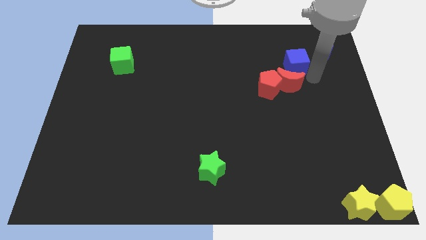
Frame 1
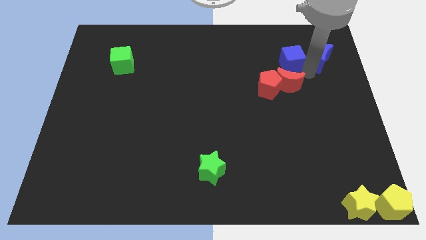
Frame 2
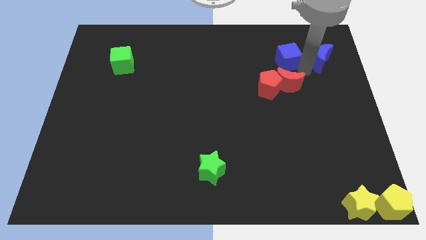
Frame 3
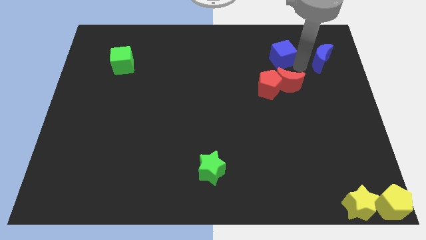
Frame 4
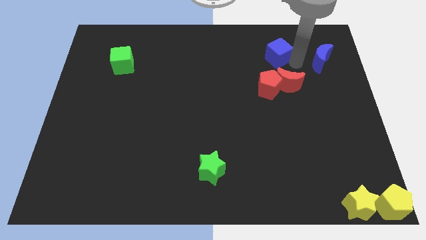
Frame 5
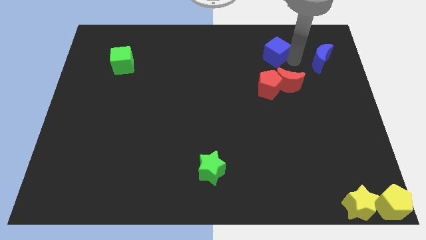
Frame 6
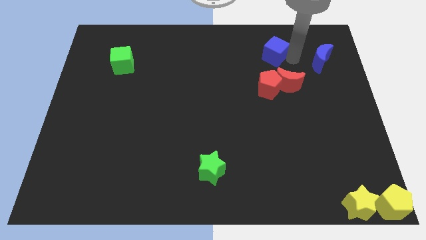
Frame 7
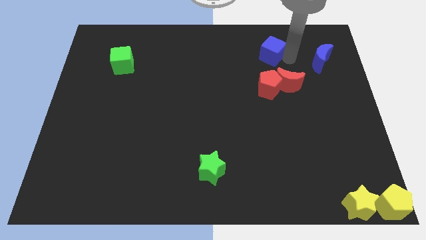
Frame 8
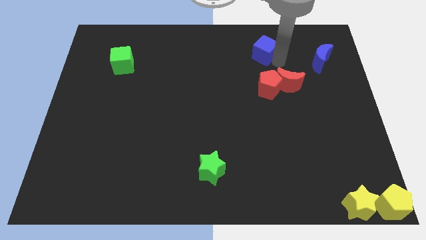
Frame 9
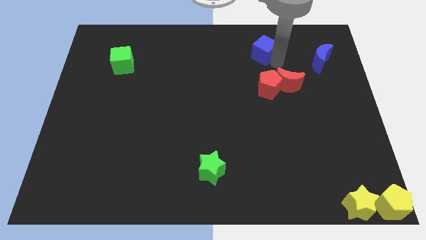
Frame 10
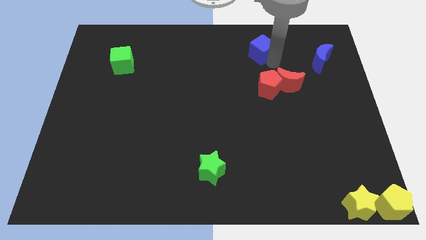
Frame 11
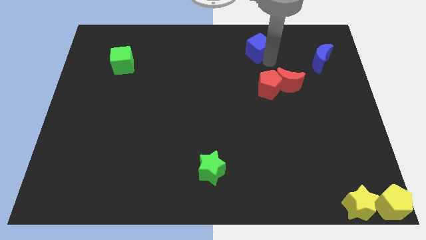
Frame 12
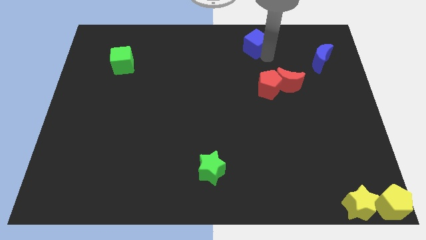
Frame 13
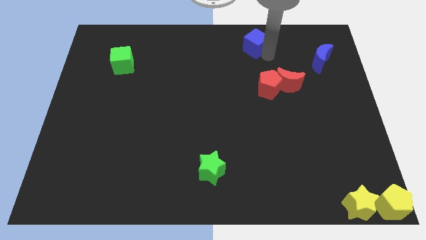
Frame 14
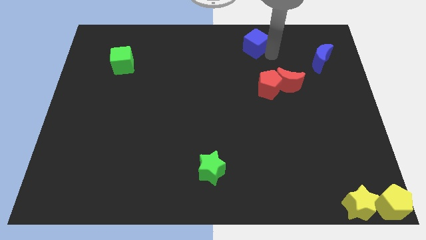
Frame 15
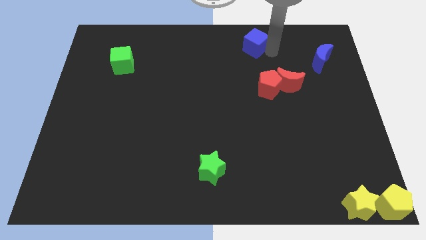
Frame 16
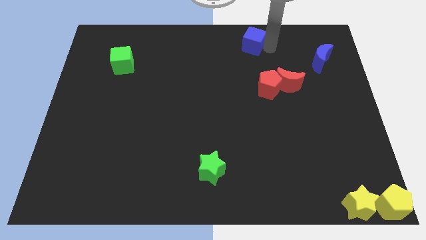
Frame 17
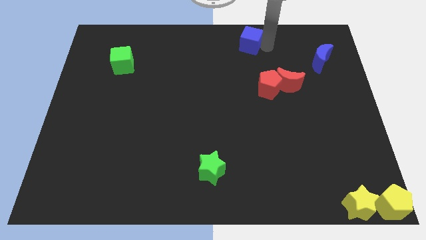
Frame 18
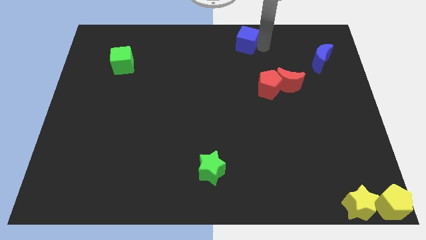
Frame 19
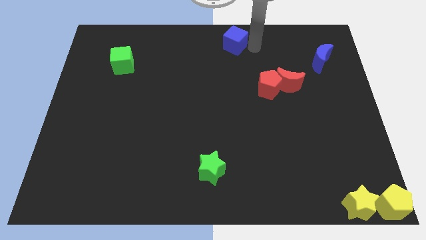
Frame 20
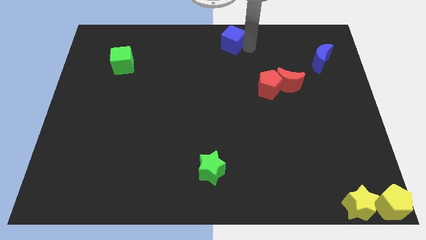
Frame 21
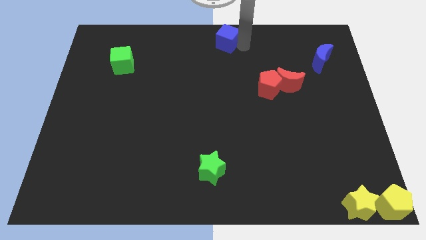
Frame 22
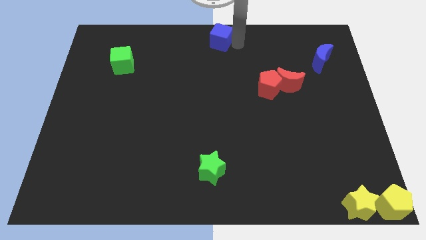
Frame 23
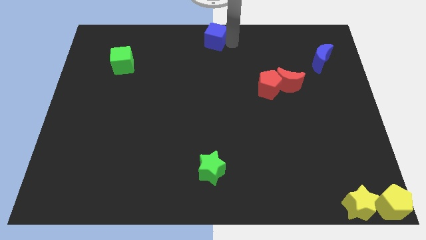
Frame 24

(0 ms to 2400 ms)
separate blue cube from the blue moon

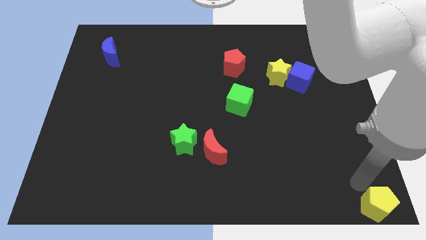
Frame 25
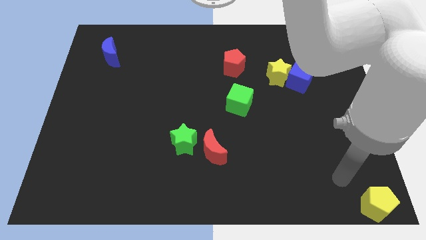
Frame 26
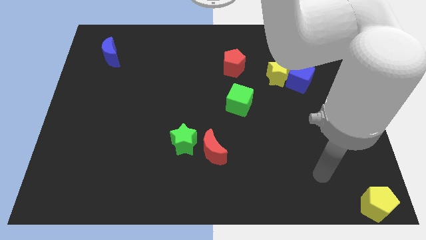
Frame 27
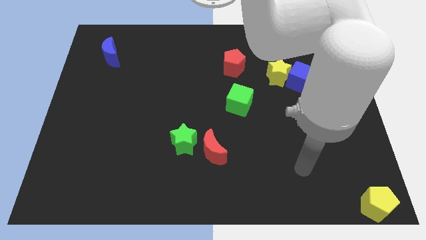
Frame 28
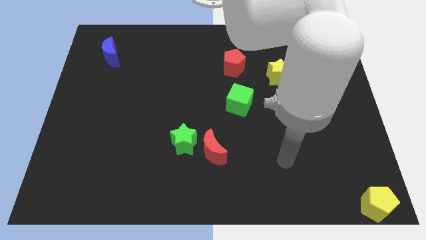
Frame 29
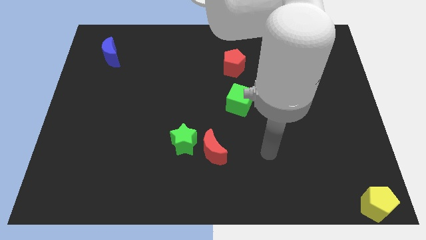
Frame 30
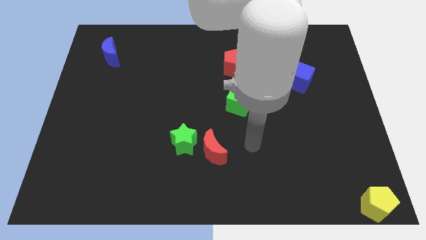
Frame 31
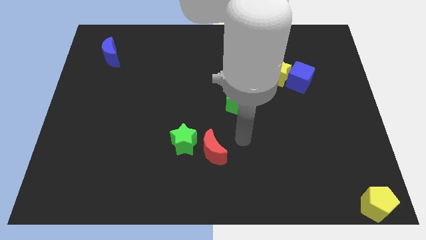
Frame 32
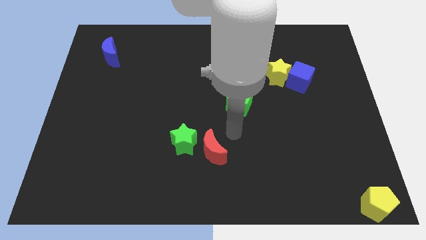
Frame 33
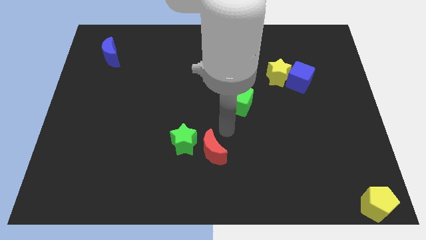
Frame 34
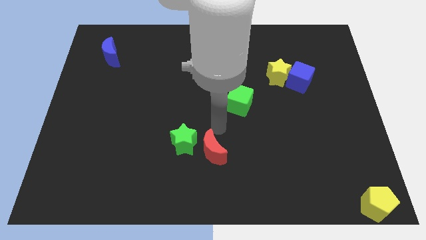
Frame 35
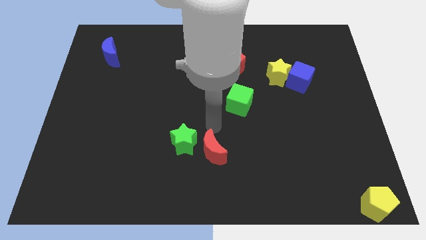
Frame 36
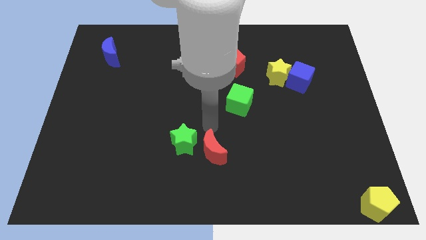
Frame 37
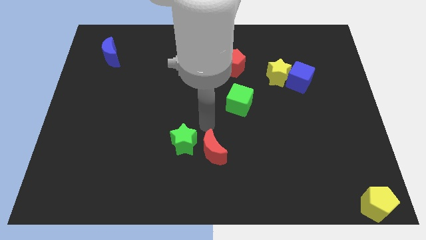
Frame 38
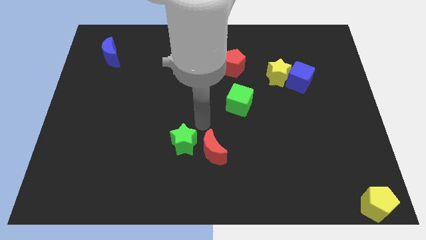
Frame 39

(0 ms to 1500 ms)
move the arm away from the yellow pentagon

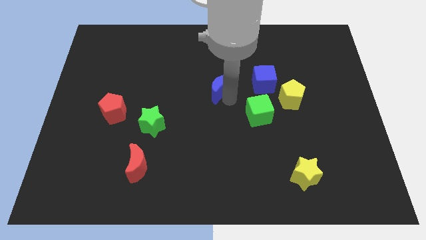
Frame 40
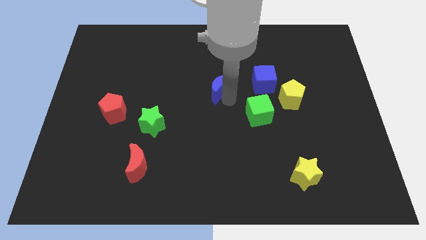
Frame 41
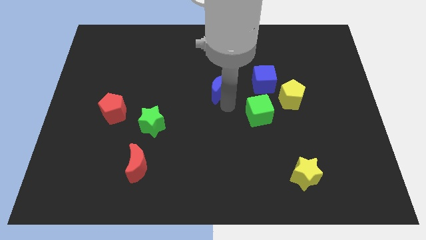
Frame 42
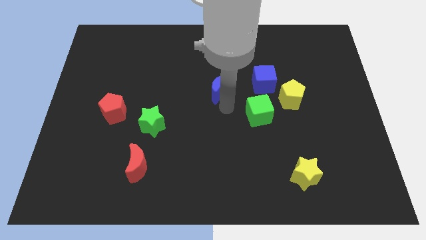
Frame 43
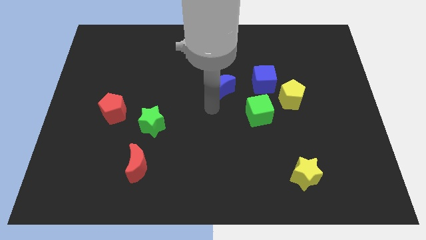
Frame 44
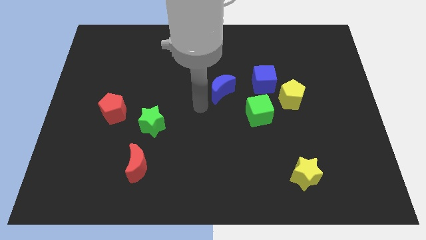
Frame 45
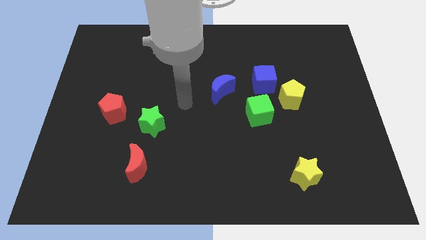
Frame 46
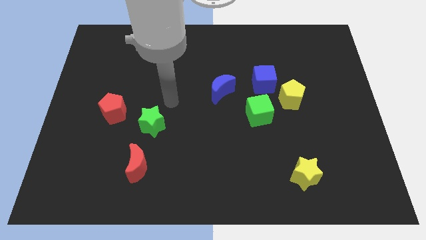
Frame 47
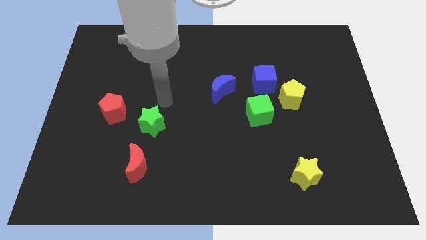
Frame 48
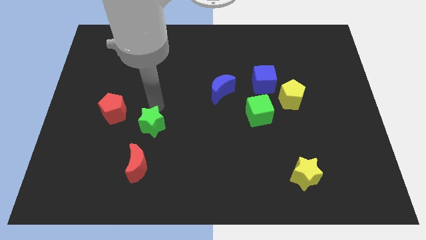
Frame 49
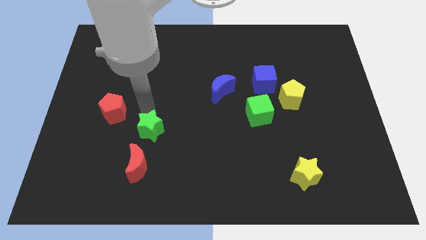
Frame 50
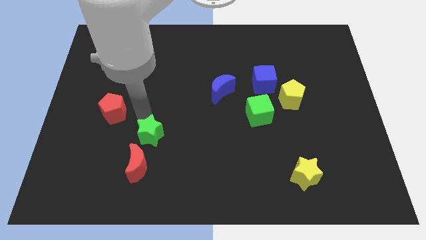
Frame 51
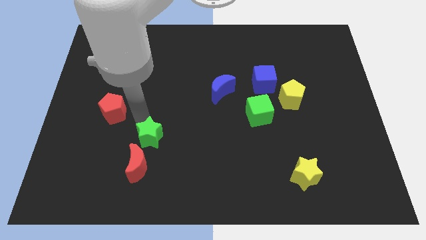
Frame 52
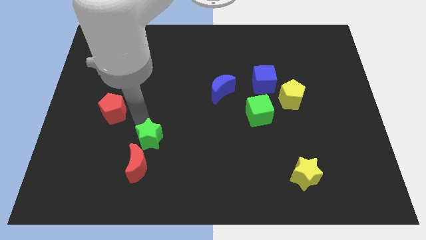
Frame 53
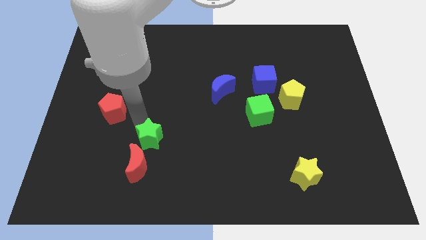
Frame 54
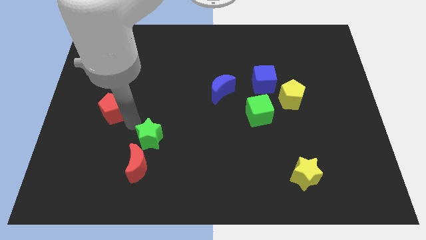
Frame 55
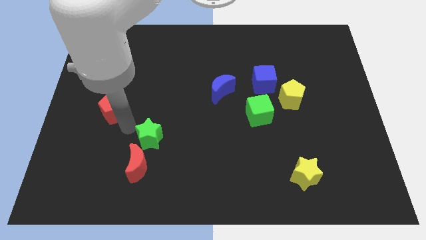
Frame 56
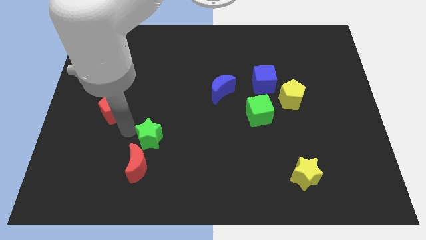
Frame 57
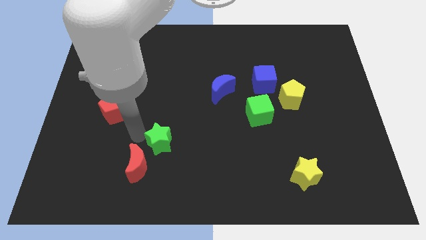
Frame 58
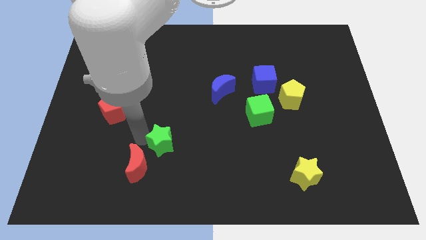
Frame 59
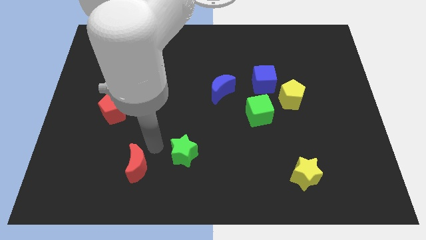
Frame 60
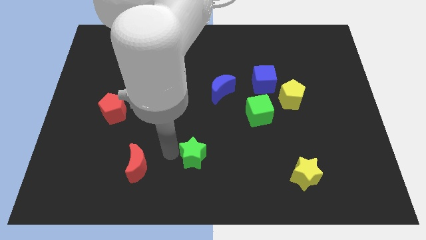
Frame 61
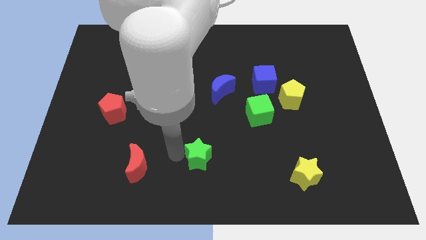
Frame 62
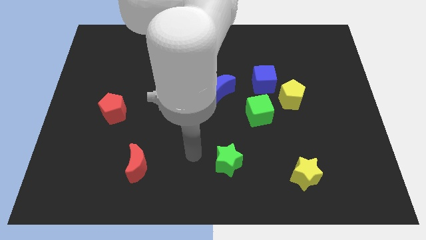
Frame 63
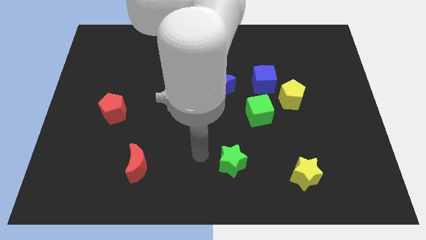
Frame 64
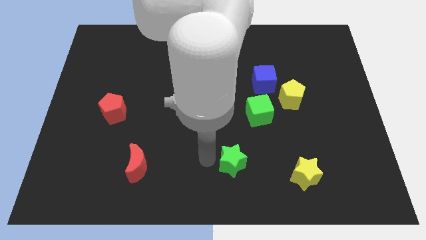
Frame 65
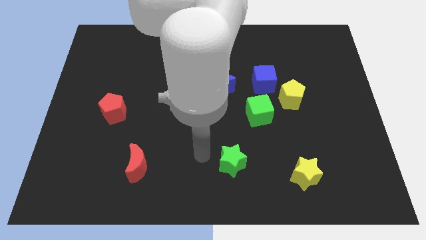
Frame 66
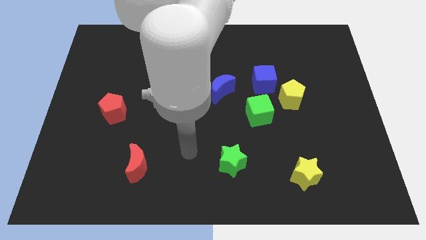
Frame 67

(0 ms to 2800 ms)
move the green star to the bottom side of the blue moon

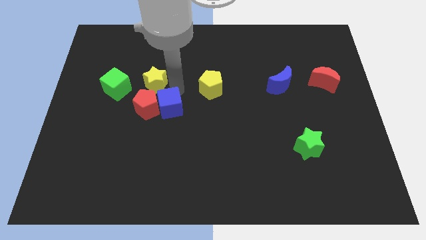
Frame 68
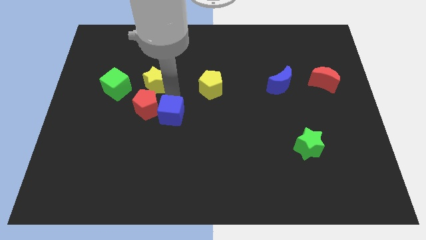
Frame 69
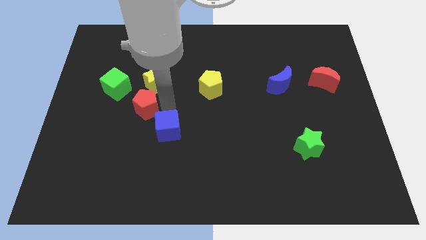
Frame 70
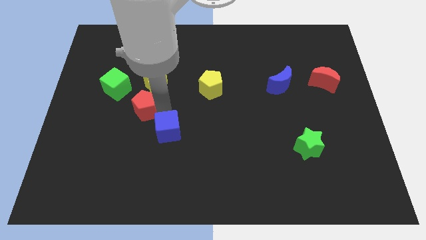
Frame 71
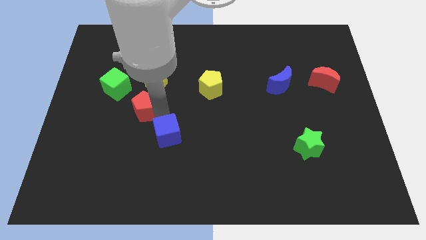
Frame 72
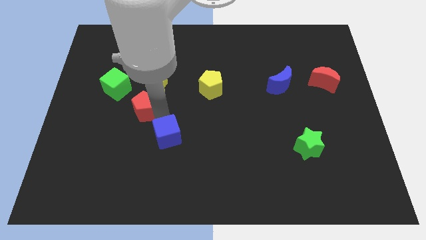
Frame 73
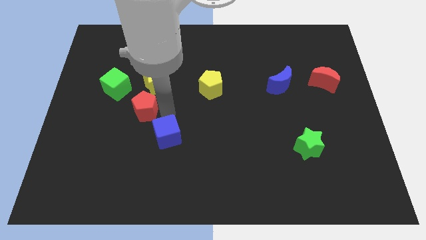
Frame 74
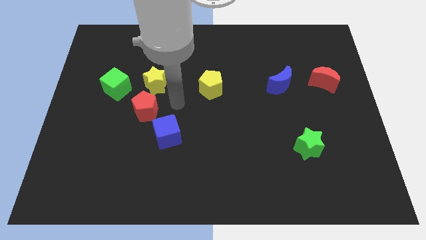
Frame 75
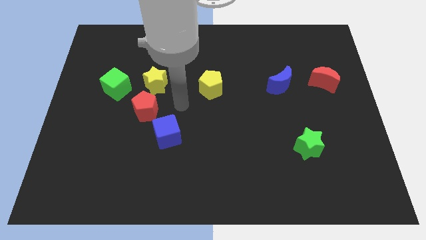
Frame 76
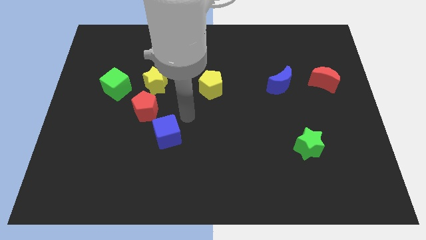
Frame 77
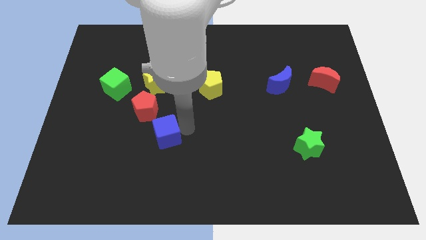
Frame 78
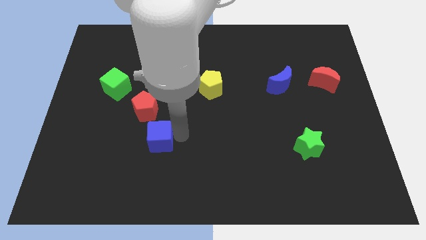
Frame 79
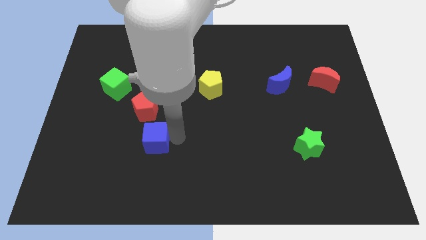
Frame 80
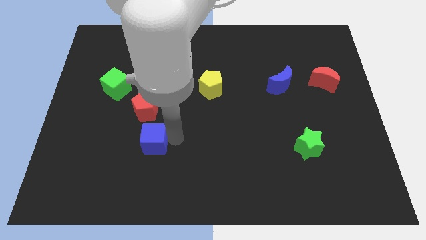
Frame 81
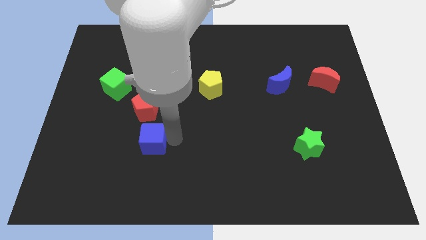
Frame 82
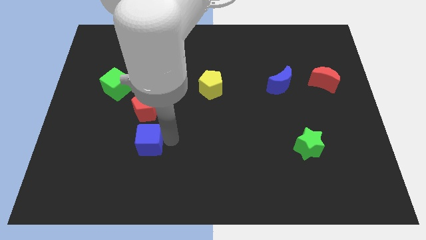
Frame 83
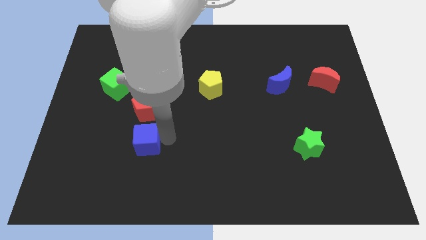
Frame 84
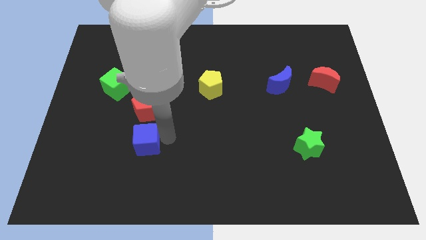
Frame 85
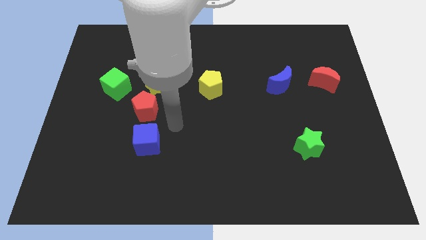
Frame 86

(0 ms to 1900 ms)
push the blue cube to the bottom side of the red pentagon

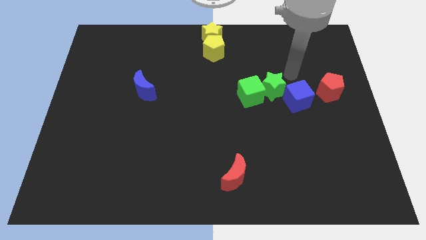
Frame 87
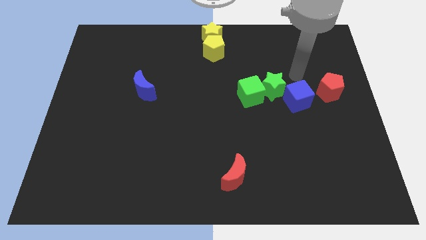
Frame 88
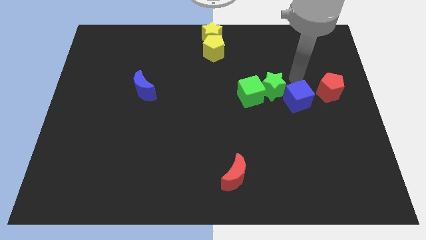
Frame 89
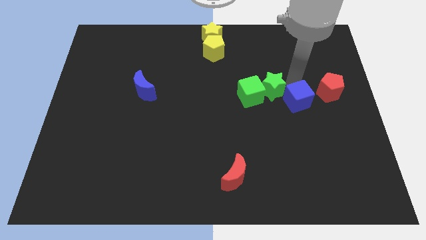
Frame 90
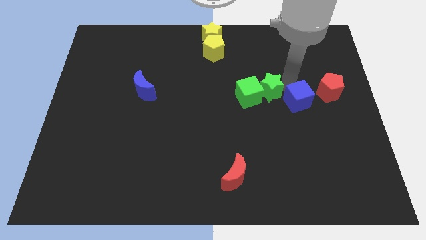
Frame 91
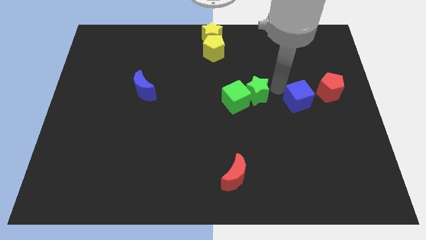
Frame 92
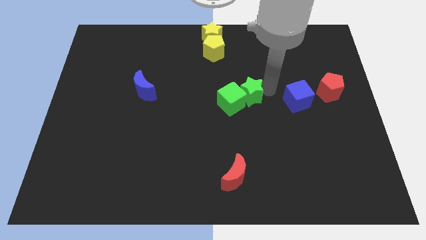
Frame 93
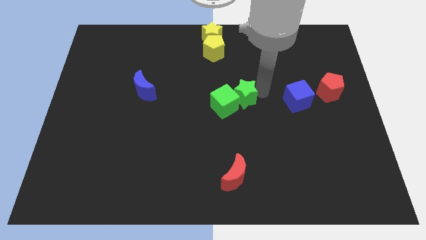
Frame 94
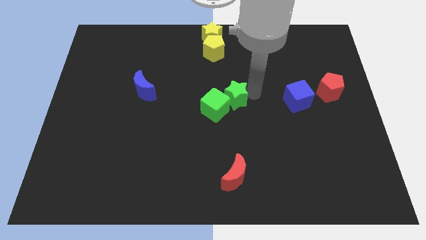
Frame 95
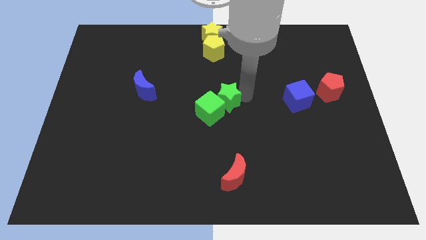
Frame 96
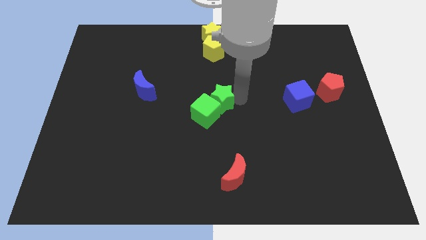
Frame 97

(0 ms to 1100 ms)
push green blocks to the center
